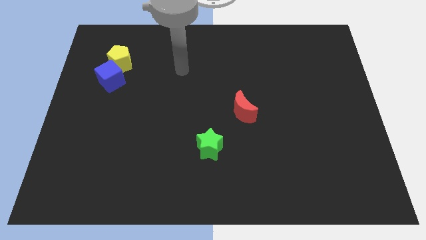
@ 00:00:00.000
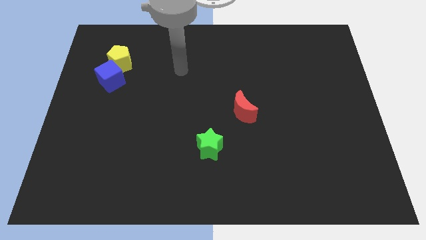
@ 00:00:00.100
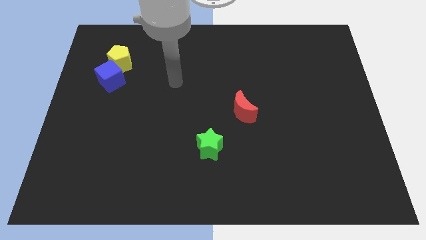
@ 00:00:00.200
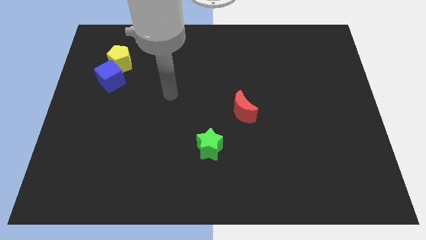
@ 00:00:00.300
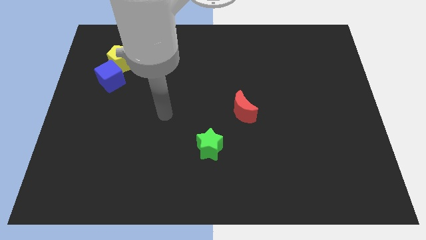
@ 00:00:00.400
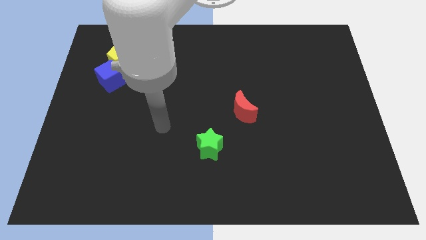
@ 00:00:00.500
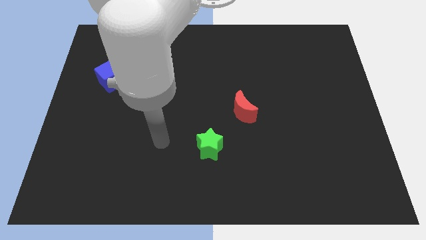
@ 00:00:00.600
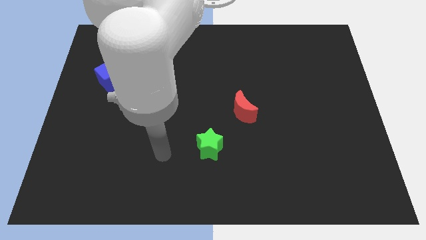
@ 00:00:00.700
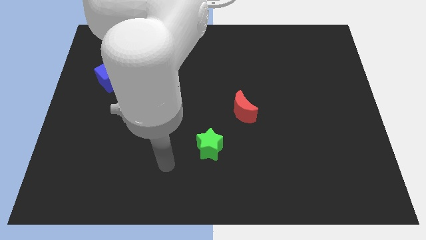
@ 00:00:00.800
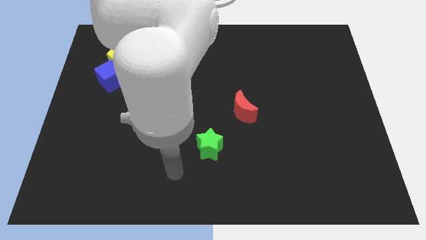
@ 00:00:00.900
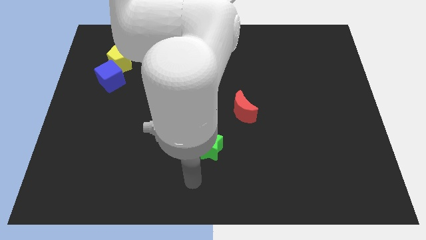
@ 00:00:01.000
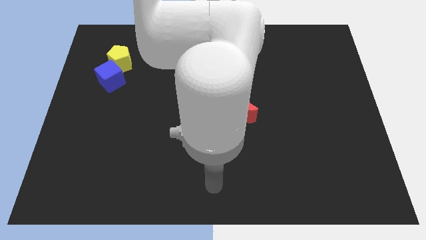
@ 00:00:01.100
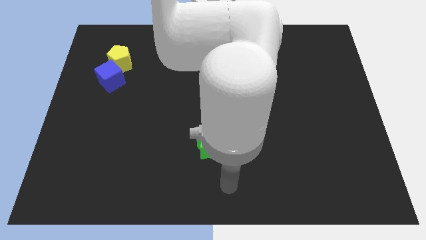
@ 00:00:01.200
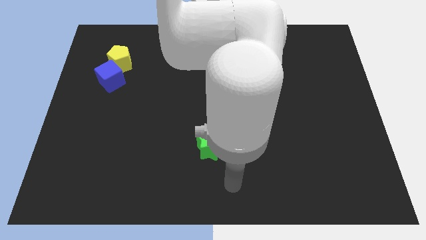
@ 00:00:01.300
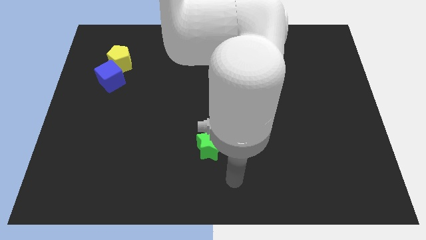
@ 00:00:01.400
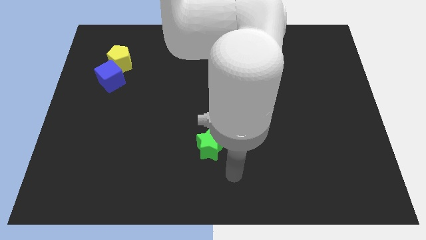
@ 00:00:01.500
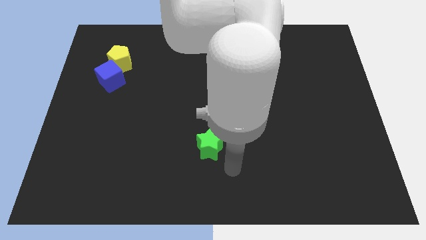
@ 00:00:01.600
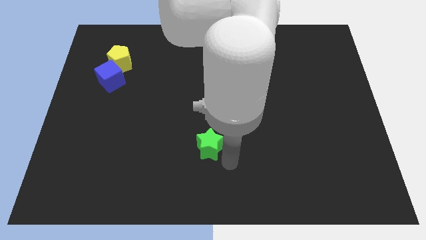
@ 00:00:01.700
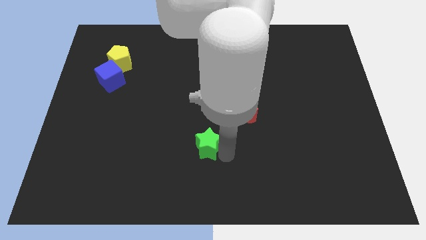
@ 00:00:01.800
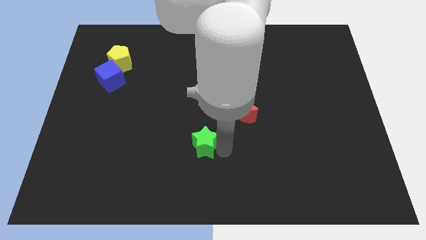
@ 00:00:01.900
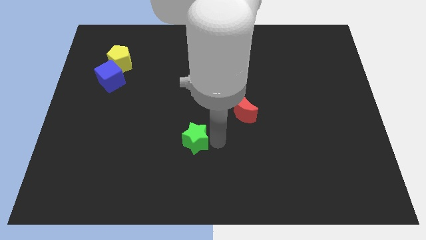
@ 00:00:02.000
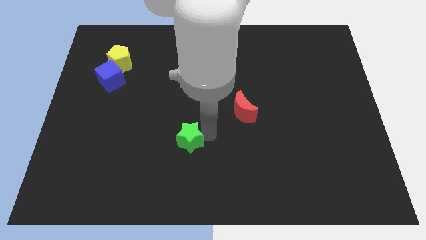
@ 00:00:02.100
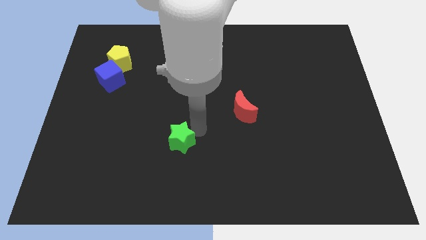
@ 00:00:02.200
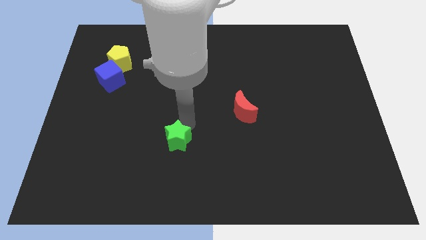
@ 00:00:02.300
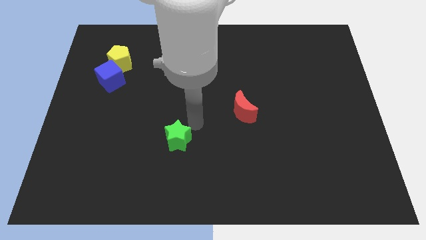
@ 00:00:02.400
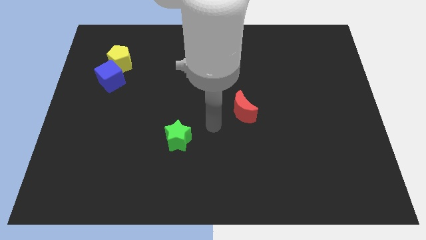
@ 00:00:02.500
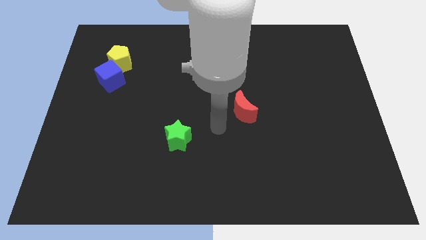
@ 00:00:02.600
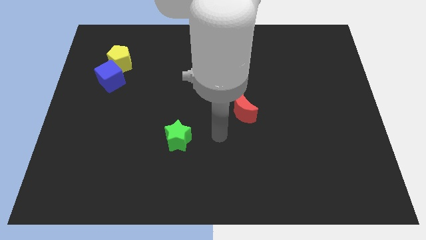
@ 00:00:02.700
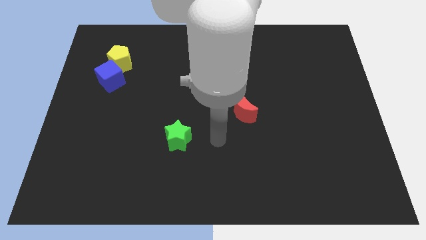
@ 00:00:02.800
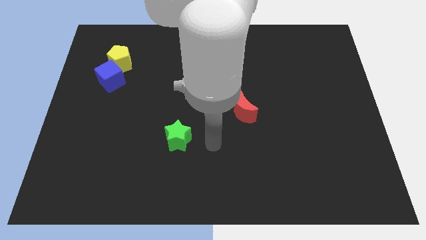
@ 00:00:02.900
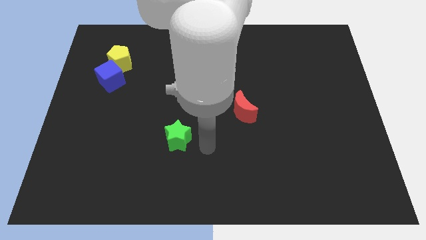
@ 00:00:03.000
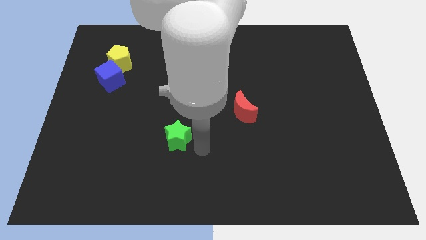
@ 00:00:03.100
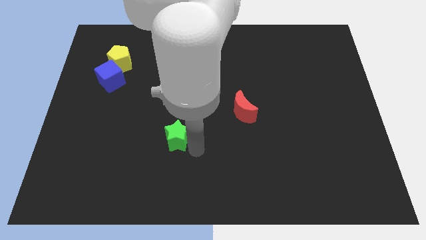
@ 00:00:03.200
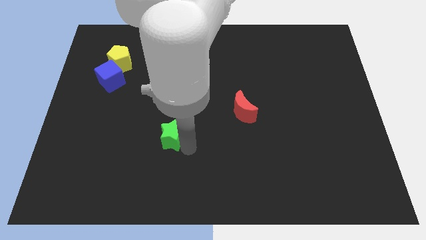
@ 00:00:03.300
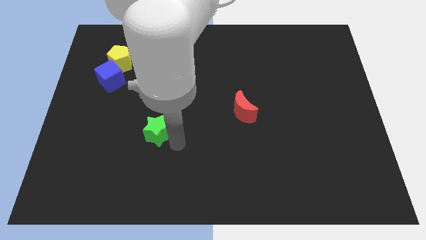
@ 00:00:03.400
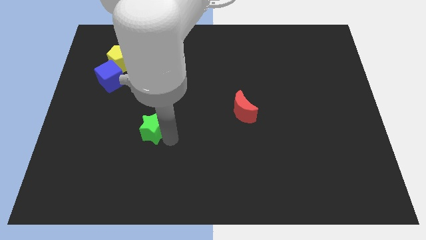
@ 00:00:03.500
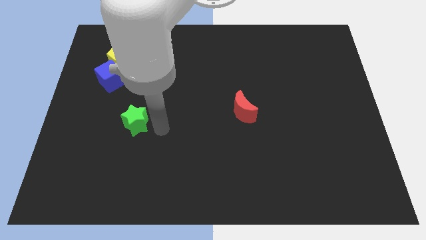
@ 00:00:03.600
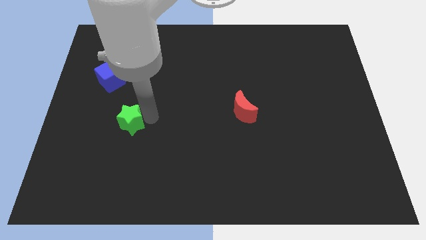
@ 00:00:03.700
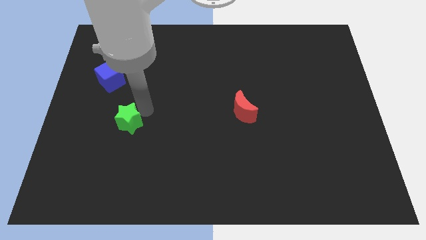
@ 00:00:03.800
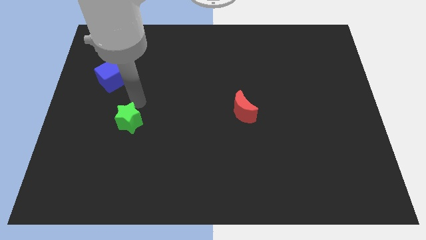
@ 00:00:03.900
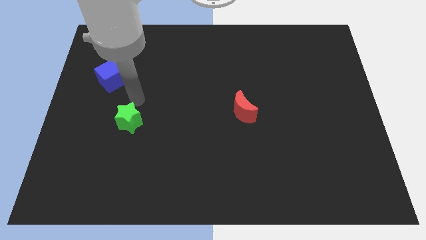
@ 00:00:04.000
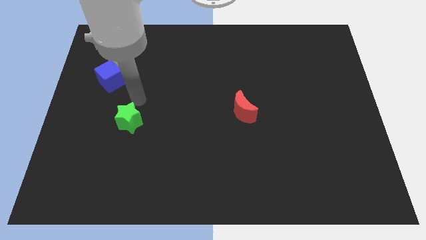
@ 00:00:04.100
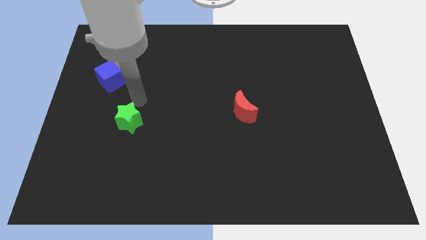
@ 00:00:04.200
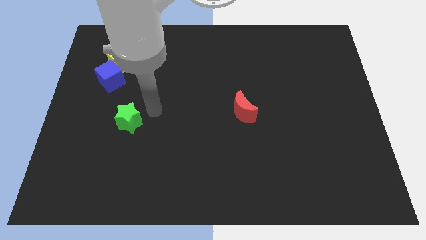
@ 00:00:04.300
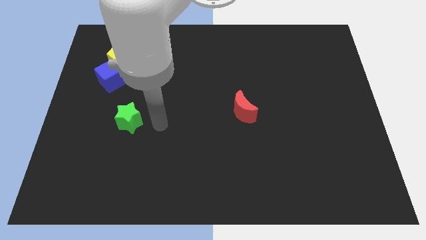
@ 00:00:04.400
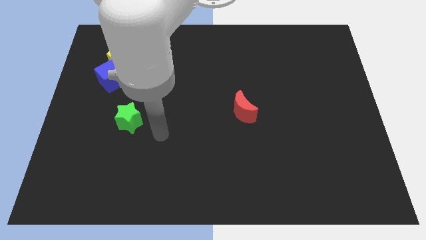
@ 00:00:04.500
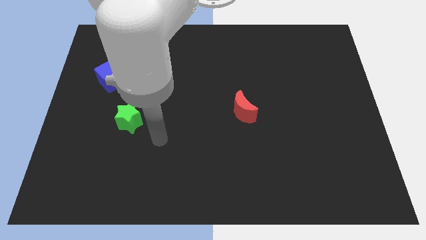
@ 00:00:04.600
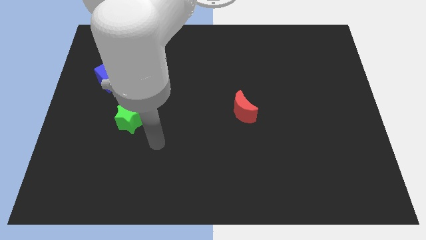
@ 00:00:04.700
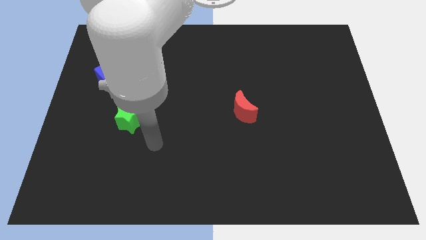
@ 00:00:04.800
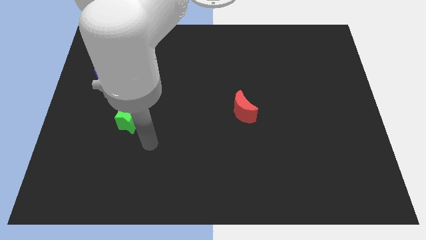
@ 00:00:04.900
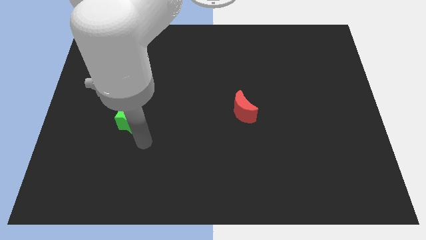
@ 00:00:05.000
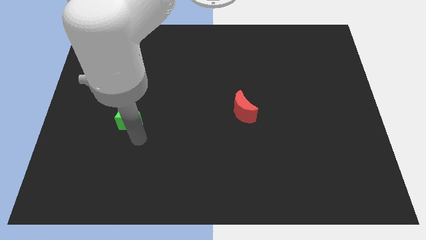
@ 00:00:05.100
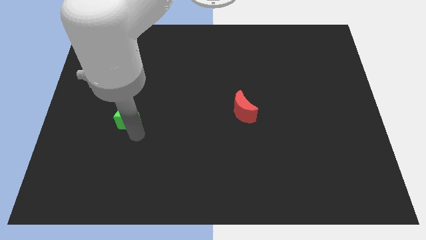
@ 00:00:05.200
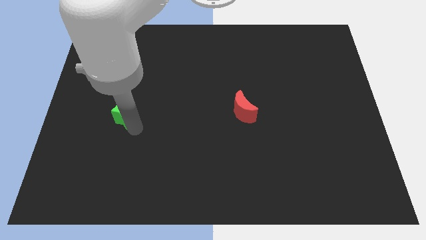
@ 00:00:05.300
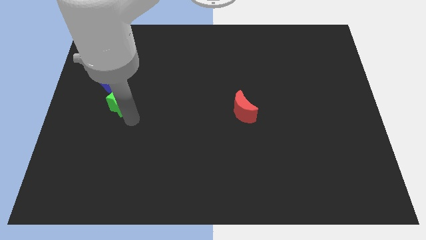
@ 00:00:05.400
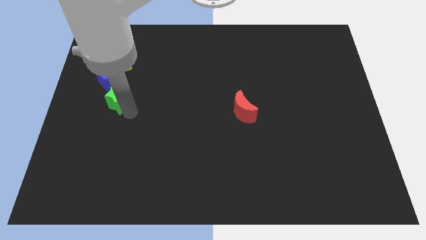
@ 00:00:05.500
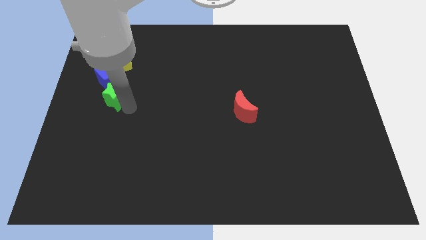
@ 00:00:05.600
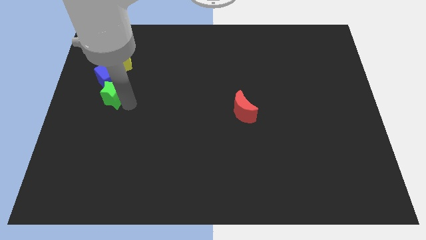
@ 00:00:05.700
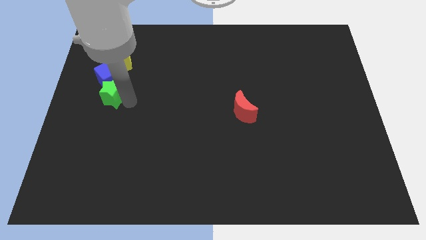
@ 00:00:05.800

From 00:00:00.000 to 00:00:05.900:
slide the star towards the blue block

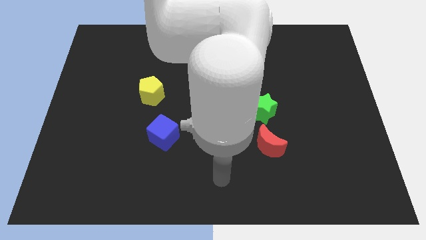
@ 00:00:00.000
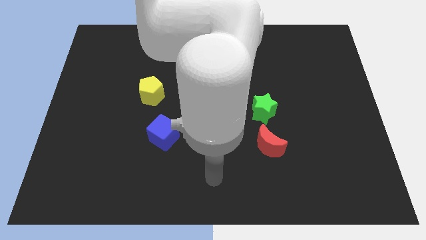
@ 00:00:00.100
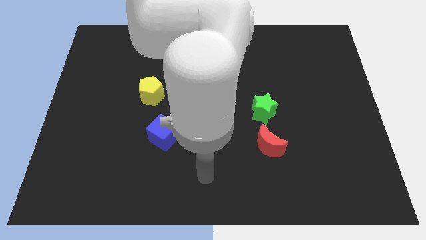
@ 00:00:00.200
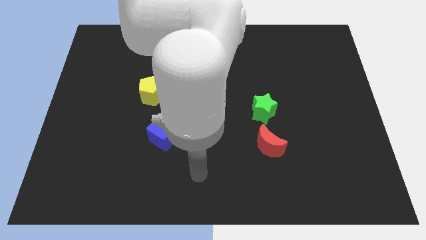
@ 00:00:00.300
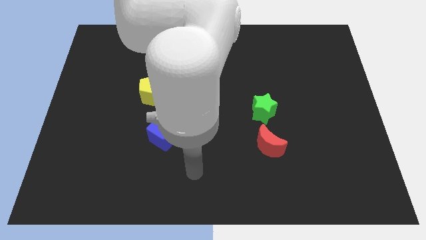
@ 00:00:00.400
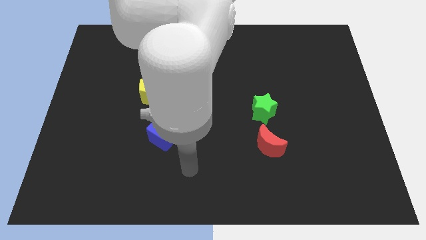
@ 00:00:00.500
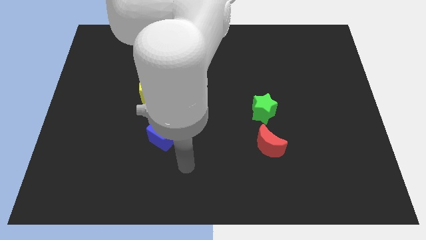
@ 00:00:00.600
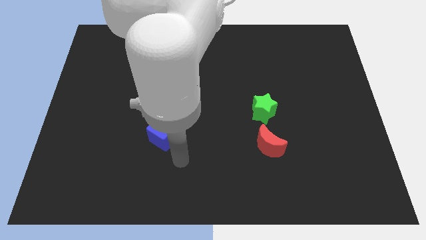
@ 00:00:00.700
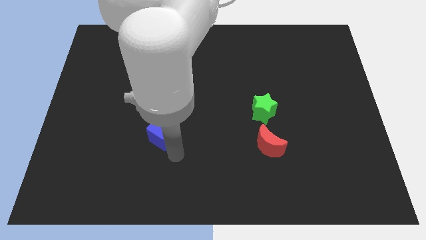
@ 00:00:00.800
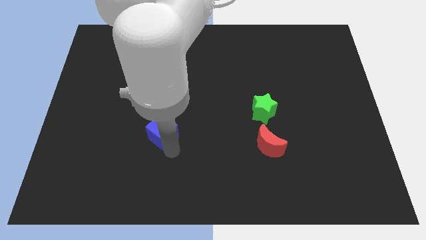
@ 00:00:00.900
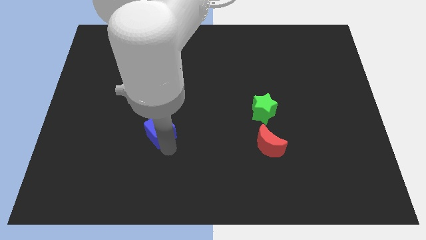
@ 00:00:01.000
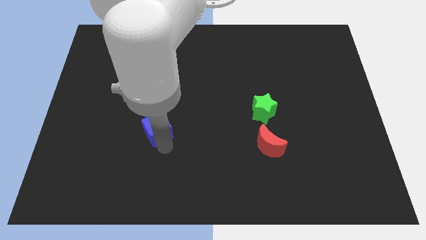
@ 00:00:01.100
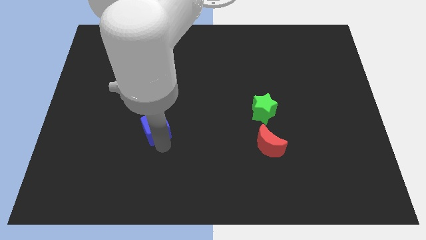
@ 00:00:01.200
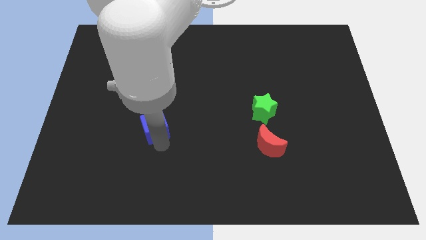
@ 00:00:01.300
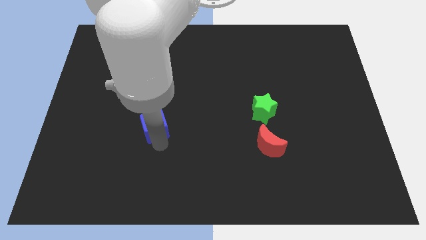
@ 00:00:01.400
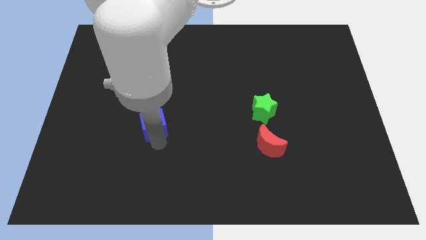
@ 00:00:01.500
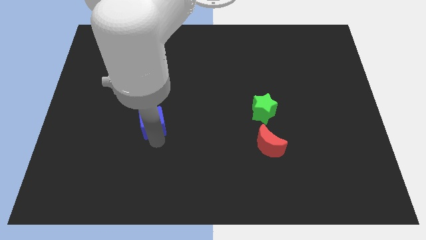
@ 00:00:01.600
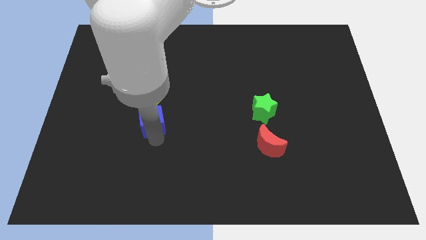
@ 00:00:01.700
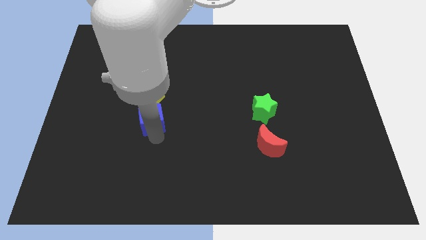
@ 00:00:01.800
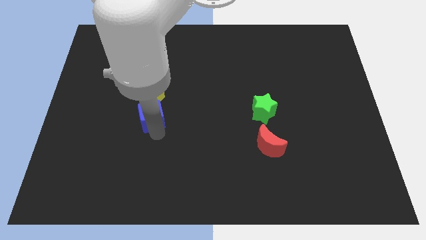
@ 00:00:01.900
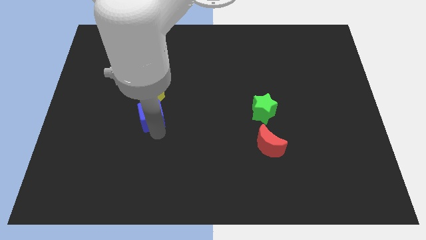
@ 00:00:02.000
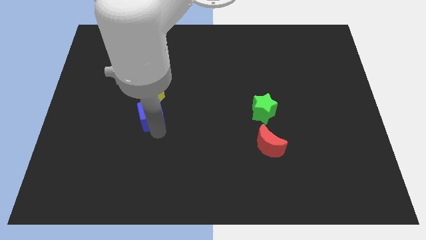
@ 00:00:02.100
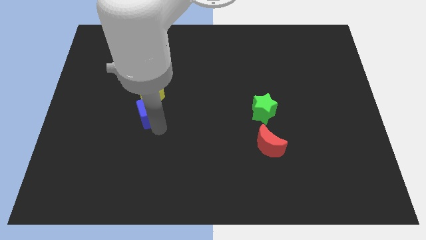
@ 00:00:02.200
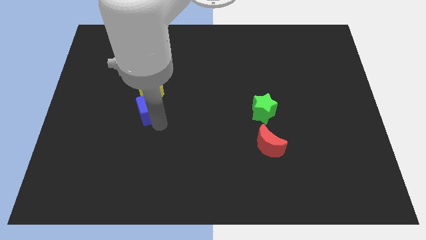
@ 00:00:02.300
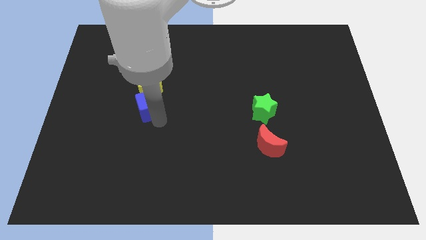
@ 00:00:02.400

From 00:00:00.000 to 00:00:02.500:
put the blue block next to the yellow pentagon

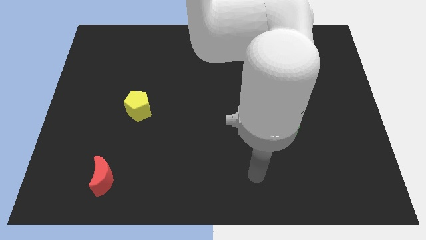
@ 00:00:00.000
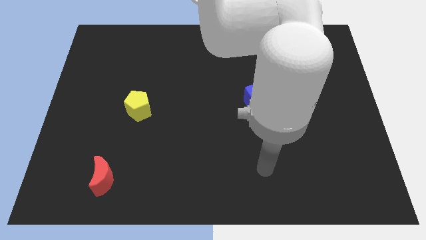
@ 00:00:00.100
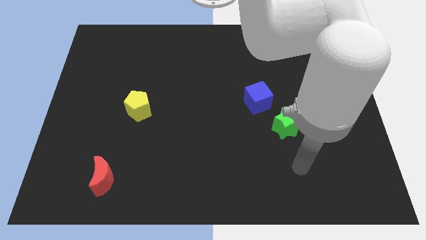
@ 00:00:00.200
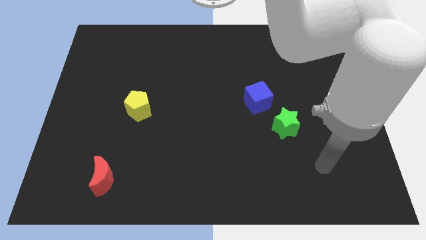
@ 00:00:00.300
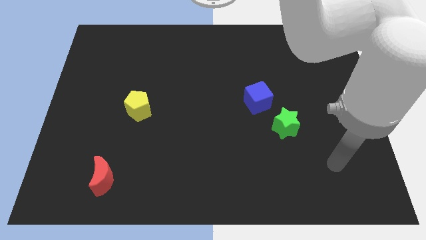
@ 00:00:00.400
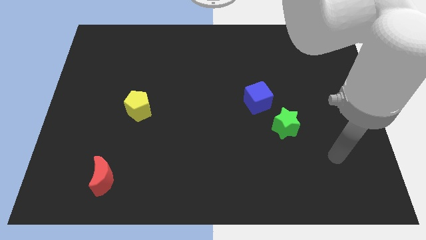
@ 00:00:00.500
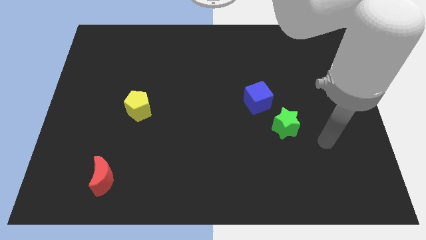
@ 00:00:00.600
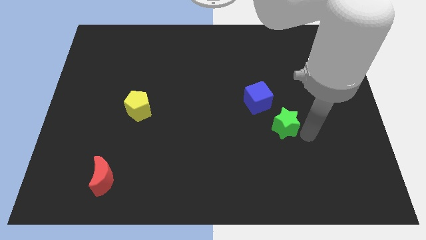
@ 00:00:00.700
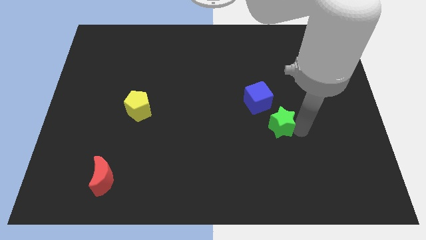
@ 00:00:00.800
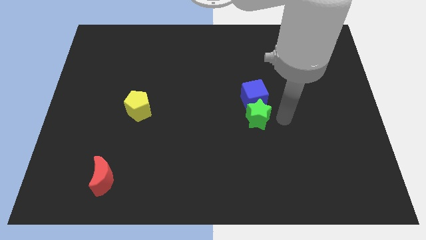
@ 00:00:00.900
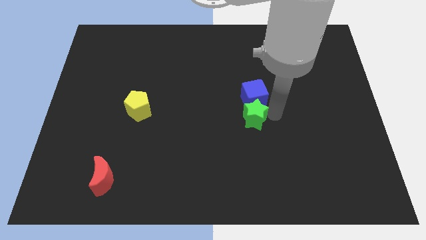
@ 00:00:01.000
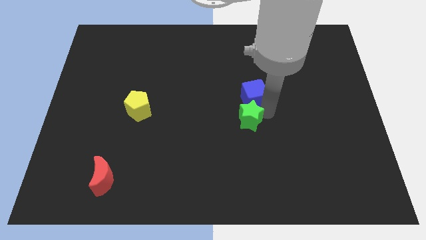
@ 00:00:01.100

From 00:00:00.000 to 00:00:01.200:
put the green block close to the blue block
